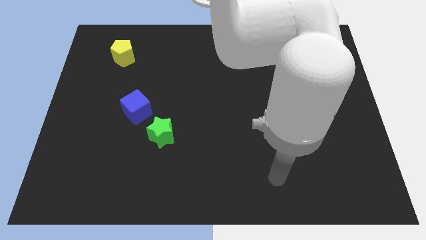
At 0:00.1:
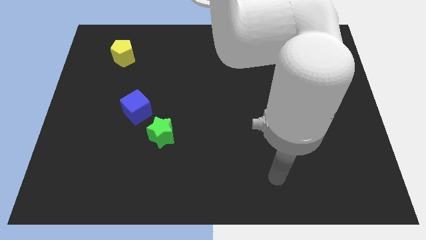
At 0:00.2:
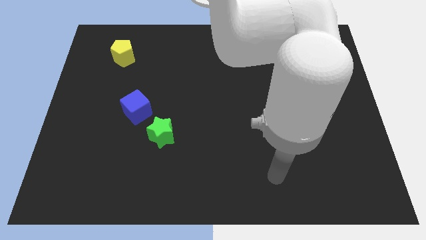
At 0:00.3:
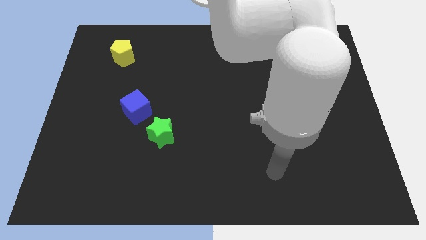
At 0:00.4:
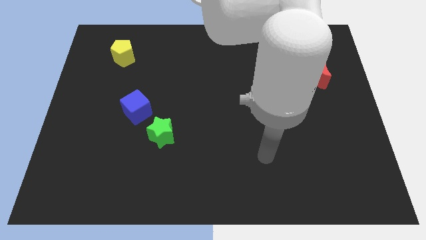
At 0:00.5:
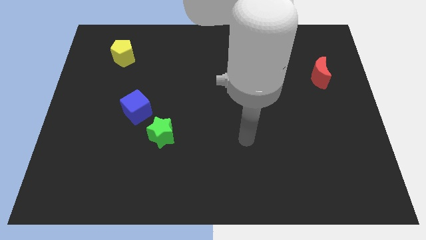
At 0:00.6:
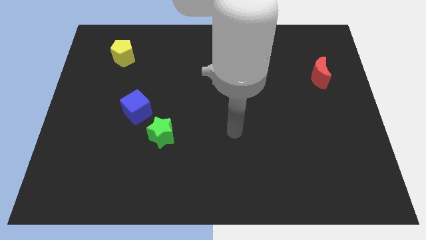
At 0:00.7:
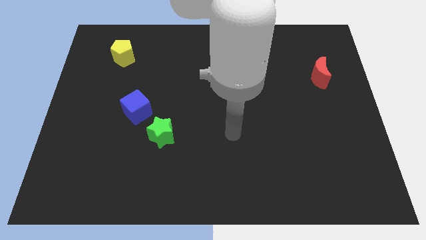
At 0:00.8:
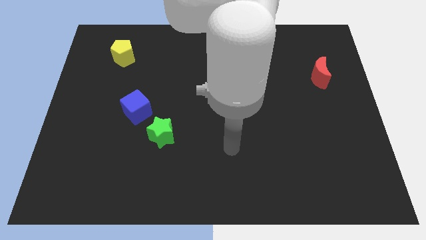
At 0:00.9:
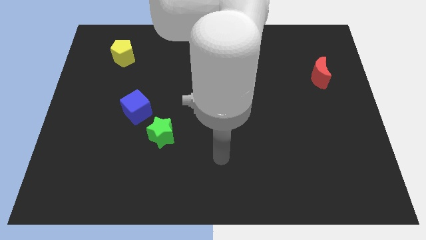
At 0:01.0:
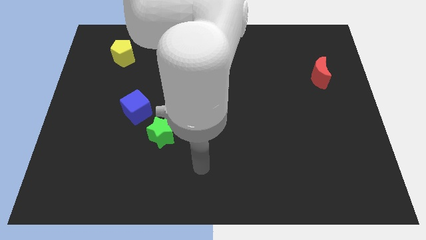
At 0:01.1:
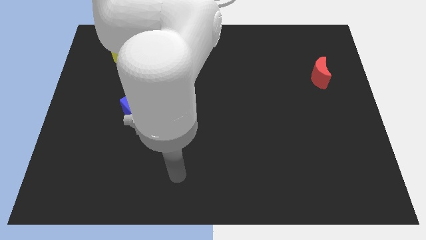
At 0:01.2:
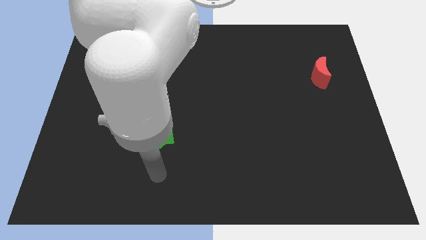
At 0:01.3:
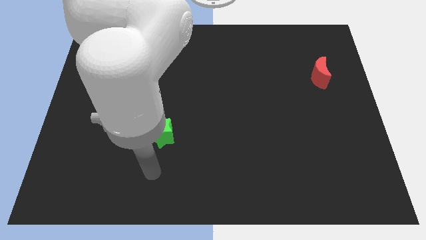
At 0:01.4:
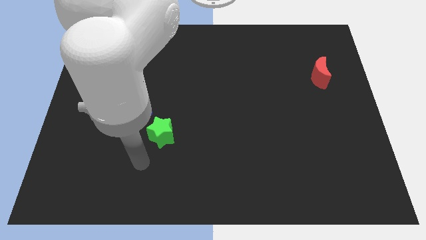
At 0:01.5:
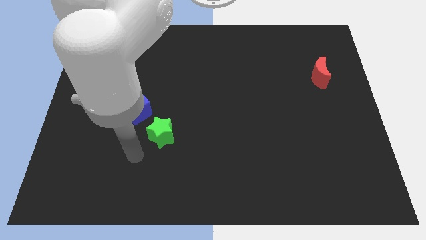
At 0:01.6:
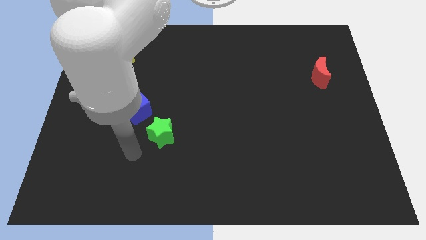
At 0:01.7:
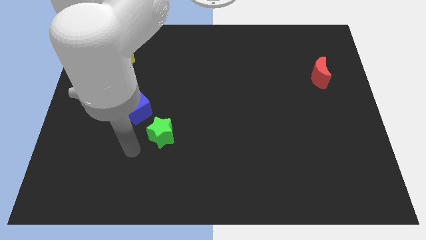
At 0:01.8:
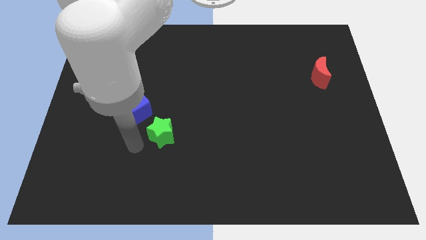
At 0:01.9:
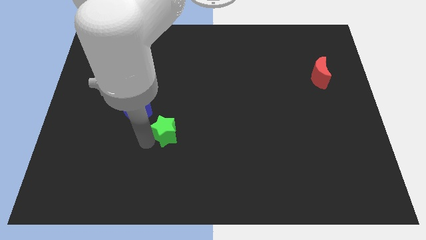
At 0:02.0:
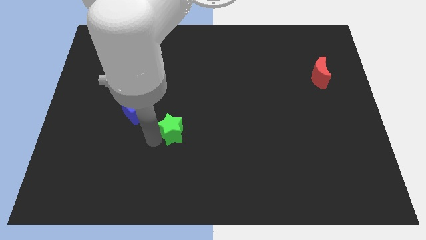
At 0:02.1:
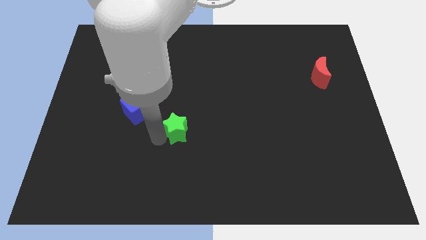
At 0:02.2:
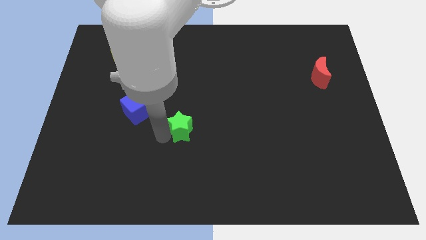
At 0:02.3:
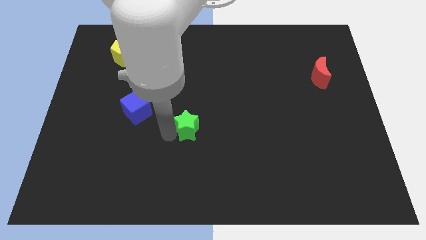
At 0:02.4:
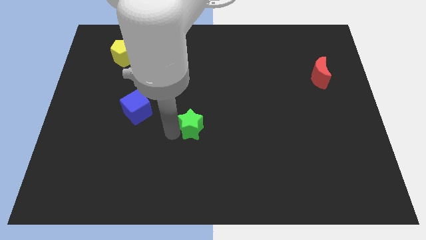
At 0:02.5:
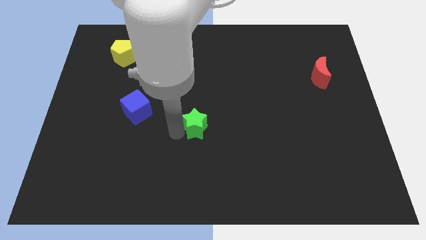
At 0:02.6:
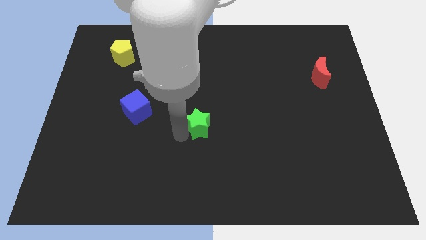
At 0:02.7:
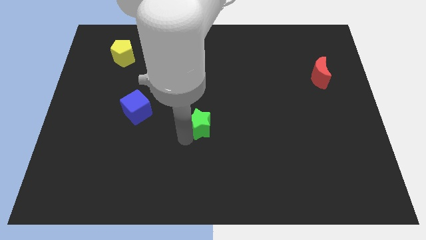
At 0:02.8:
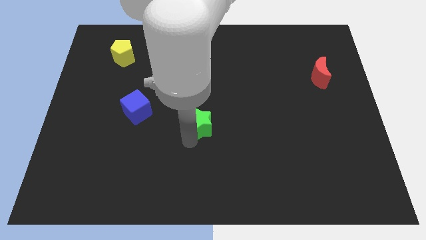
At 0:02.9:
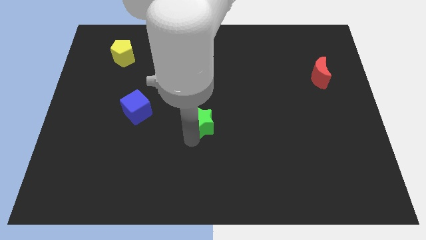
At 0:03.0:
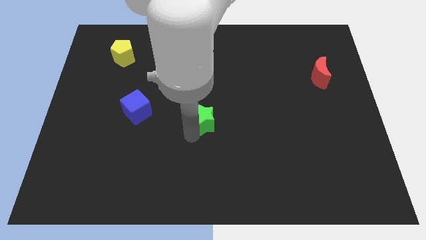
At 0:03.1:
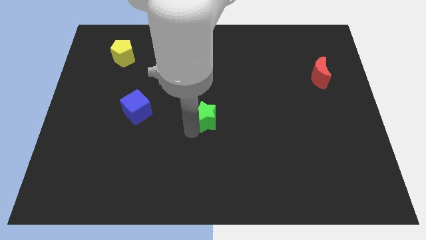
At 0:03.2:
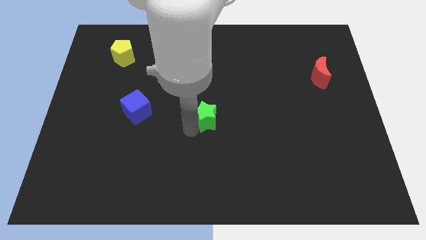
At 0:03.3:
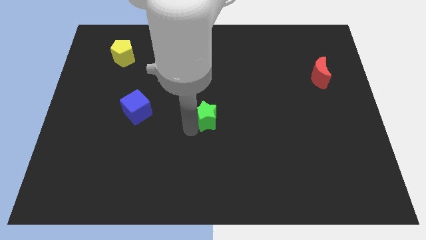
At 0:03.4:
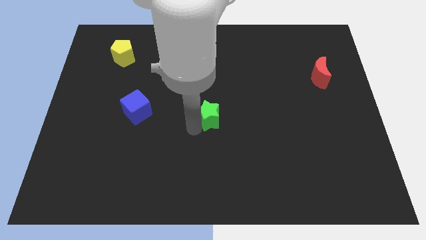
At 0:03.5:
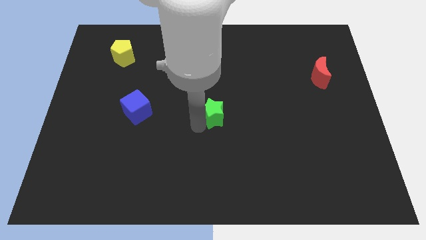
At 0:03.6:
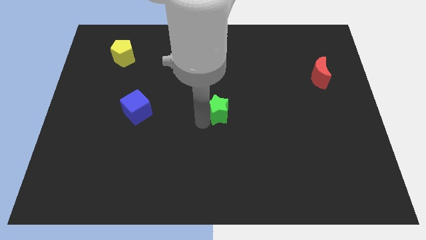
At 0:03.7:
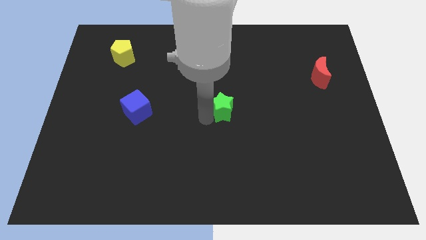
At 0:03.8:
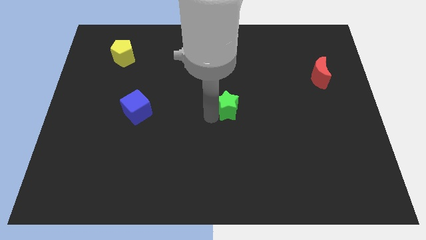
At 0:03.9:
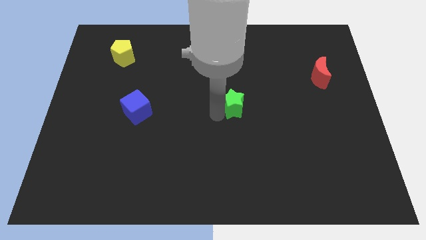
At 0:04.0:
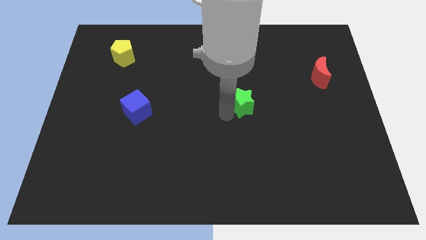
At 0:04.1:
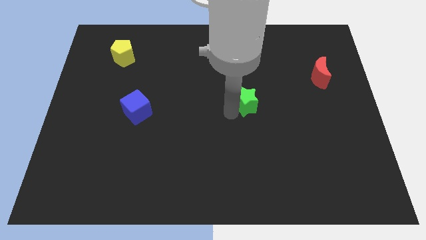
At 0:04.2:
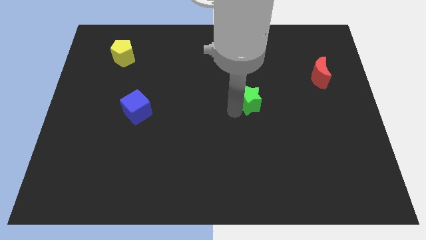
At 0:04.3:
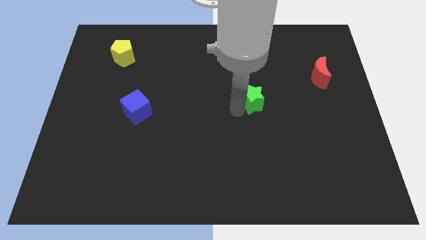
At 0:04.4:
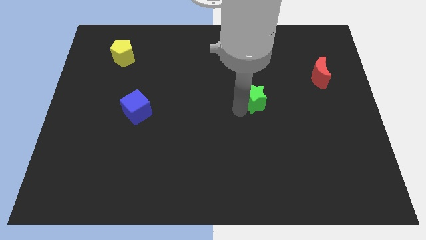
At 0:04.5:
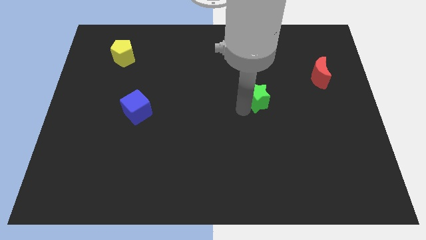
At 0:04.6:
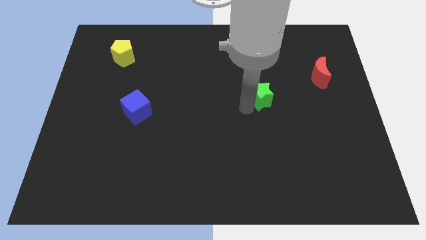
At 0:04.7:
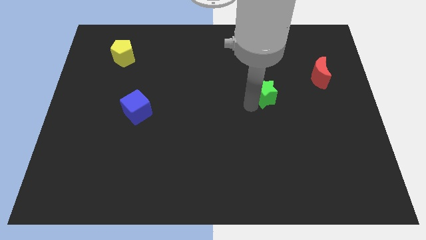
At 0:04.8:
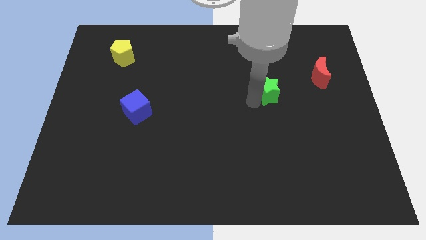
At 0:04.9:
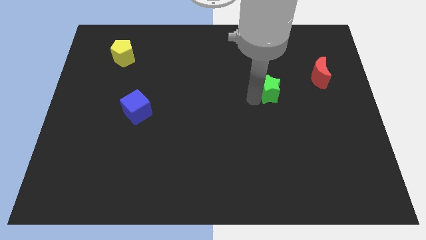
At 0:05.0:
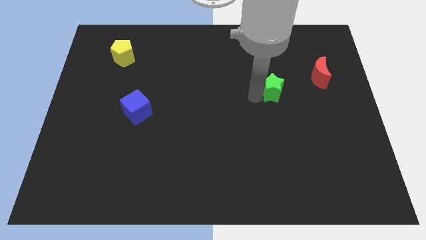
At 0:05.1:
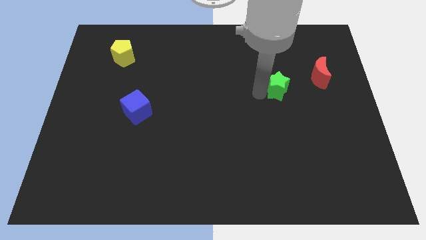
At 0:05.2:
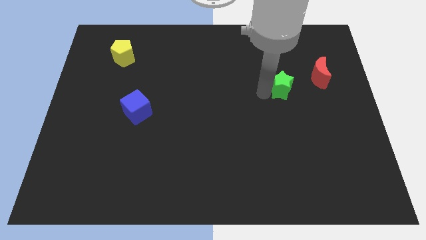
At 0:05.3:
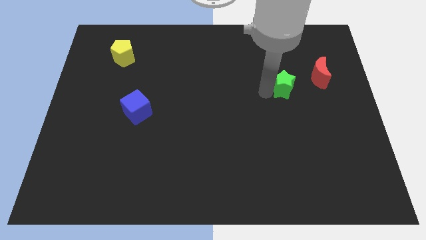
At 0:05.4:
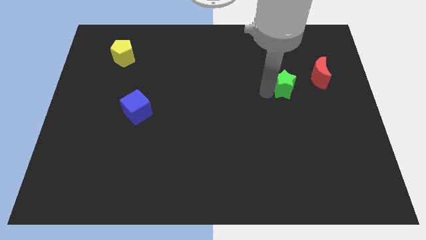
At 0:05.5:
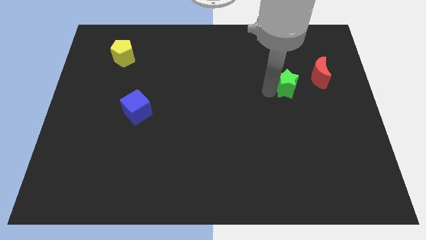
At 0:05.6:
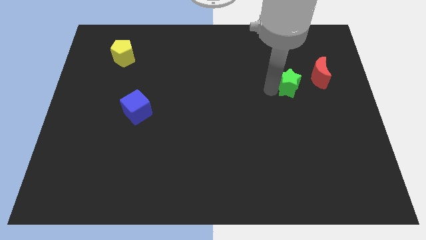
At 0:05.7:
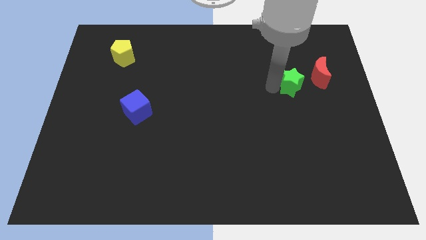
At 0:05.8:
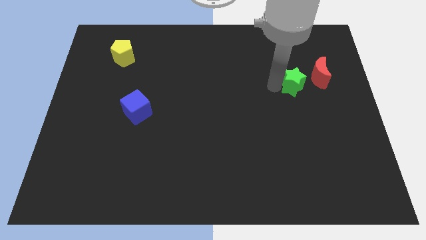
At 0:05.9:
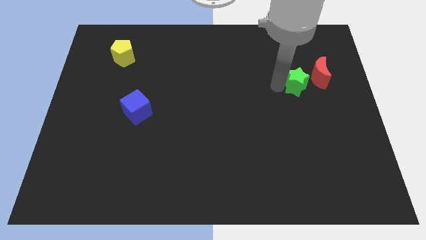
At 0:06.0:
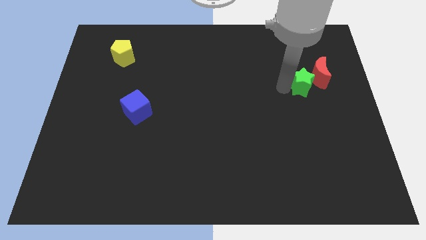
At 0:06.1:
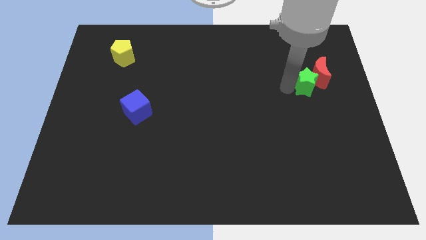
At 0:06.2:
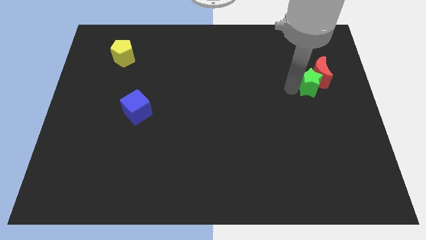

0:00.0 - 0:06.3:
move the star to the moon

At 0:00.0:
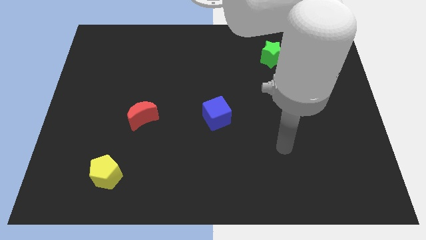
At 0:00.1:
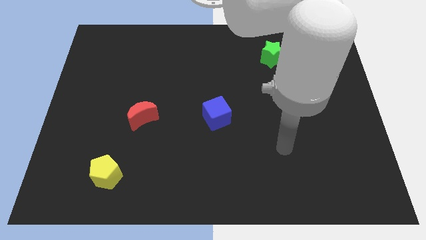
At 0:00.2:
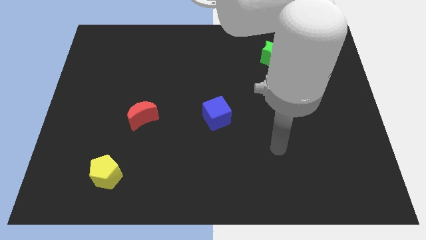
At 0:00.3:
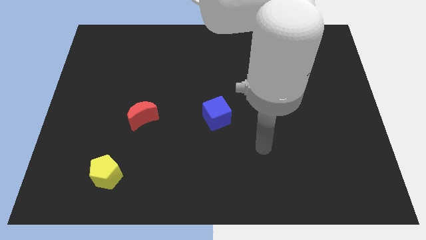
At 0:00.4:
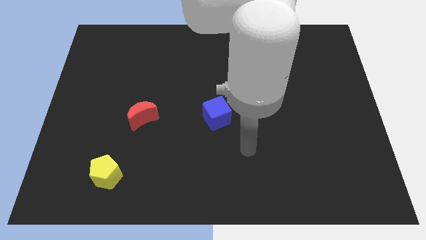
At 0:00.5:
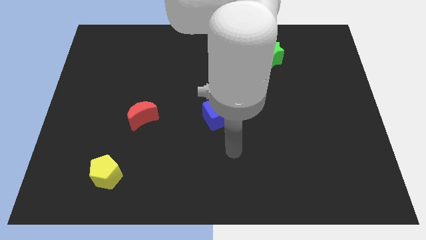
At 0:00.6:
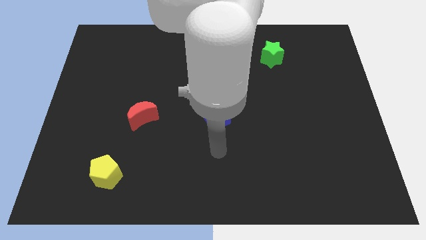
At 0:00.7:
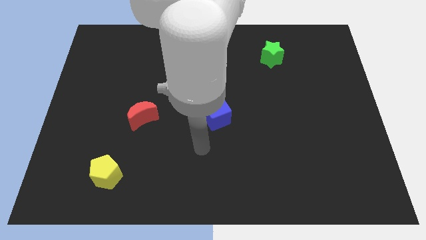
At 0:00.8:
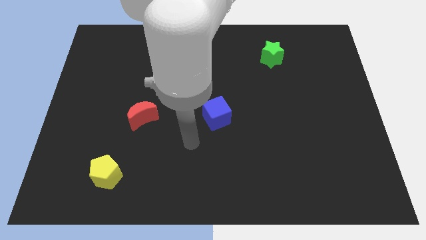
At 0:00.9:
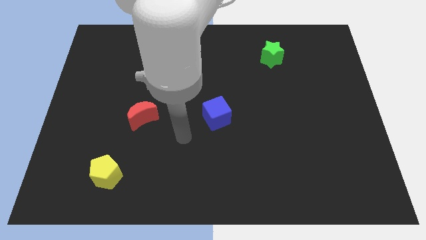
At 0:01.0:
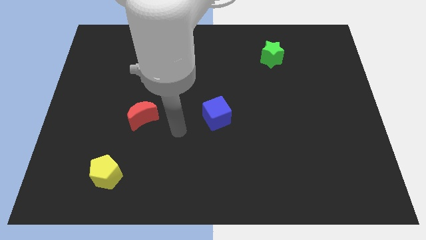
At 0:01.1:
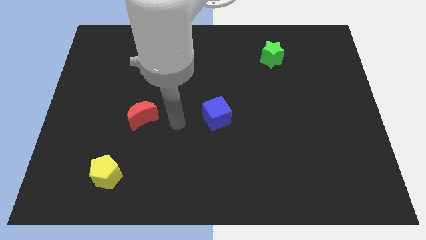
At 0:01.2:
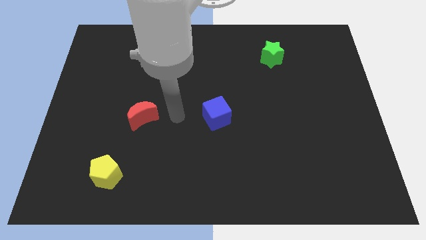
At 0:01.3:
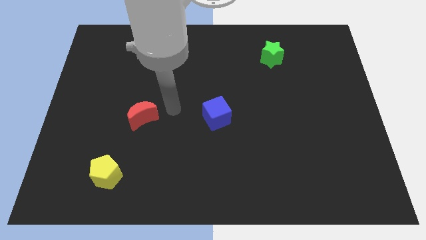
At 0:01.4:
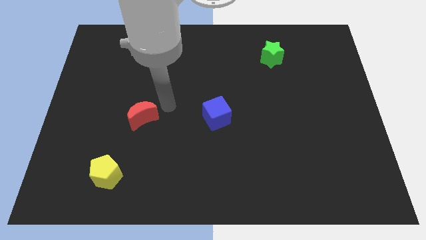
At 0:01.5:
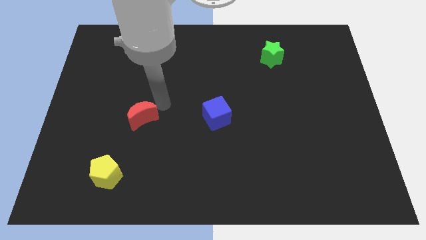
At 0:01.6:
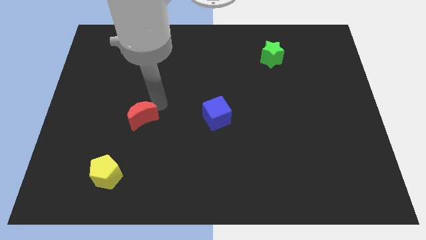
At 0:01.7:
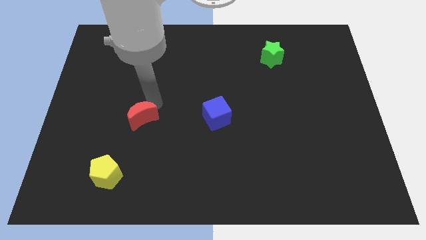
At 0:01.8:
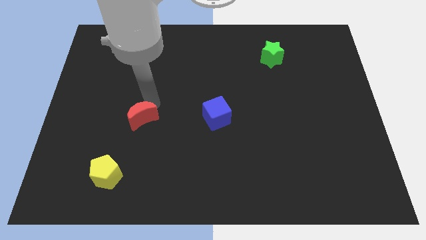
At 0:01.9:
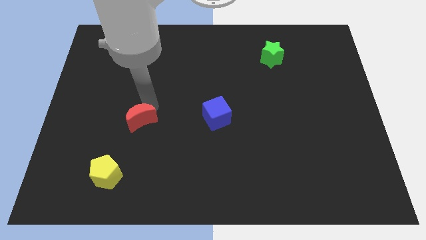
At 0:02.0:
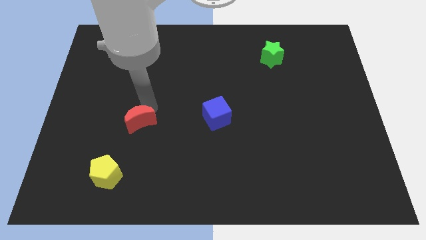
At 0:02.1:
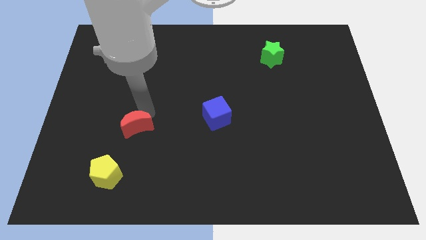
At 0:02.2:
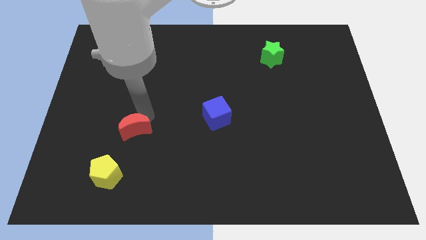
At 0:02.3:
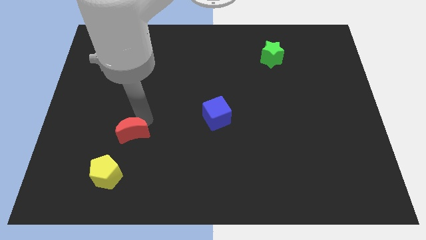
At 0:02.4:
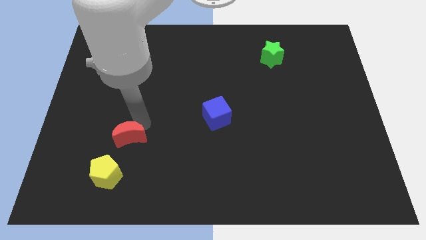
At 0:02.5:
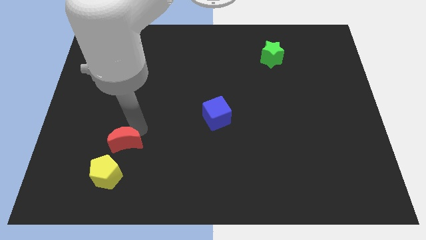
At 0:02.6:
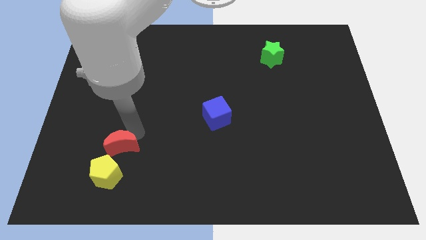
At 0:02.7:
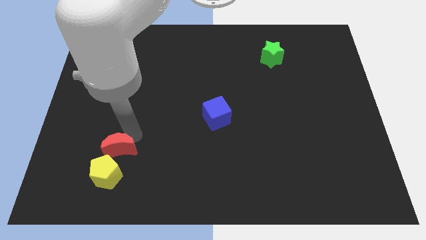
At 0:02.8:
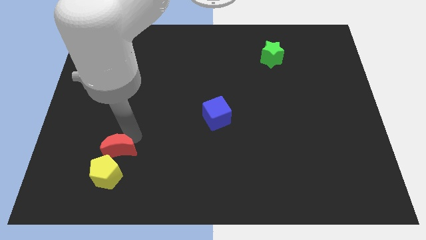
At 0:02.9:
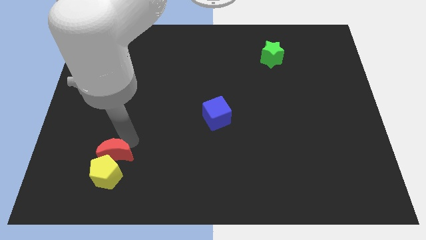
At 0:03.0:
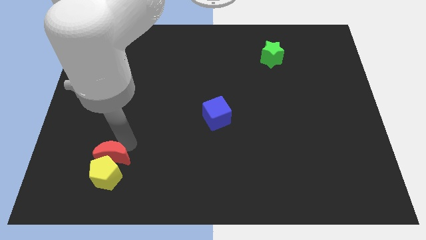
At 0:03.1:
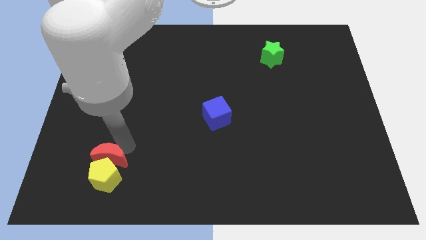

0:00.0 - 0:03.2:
push the red moon to the yellow pentagon
